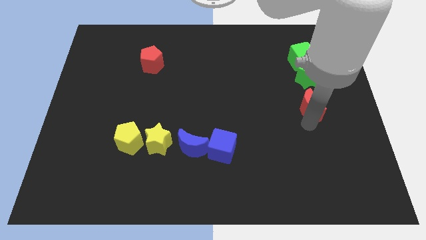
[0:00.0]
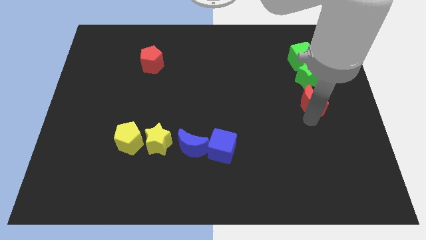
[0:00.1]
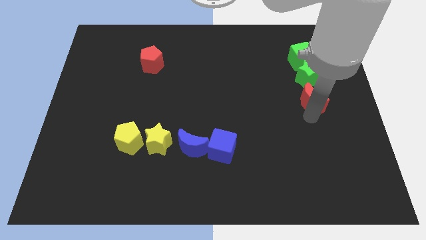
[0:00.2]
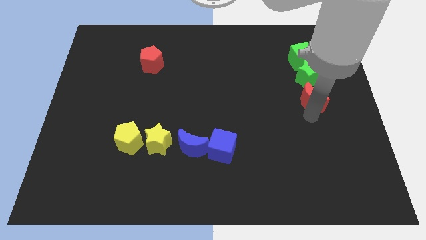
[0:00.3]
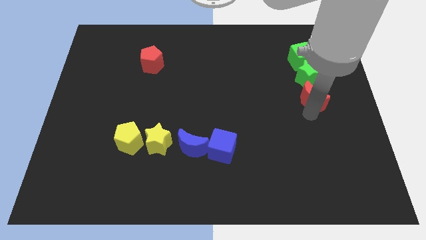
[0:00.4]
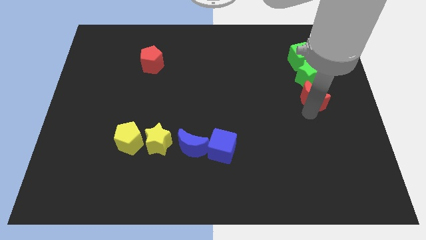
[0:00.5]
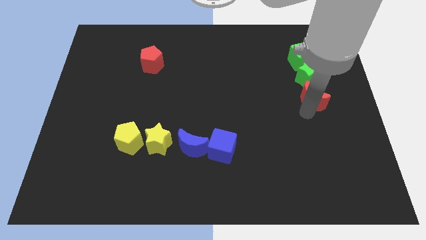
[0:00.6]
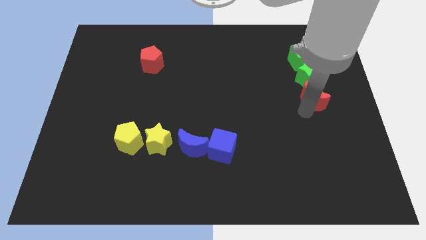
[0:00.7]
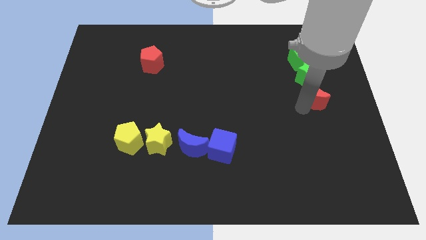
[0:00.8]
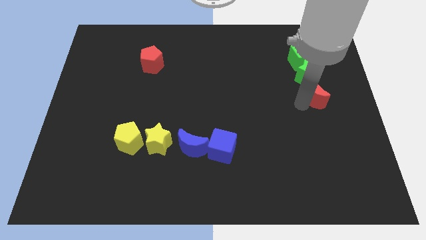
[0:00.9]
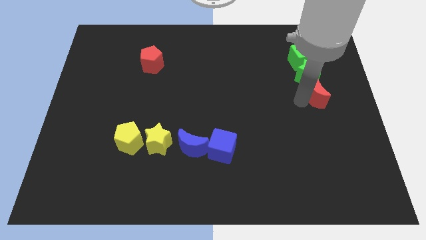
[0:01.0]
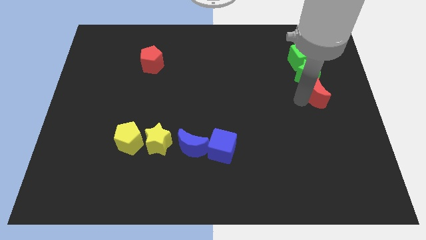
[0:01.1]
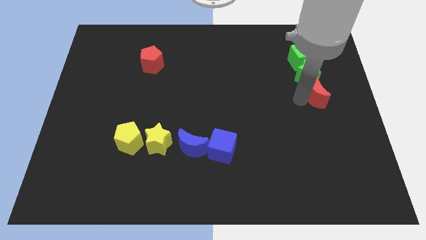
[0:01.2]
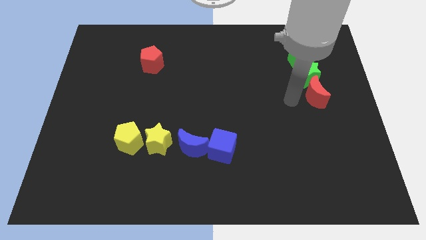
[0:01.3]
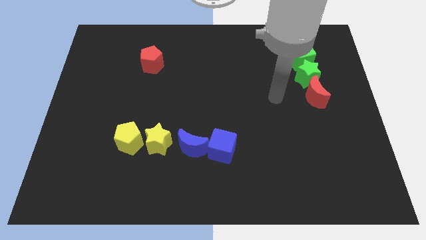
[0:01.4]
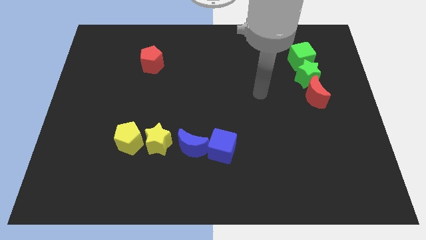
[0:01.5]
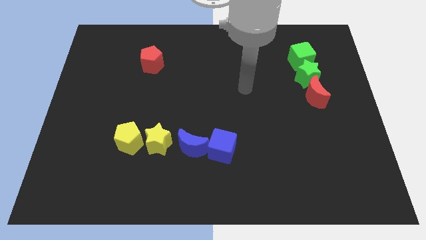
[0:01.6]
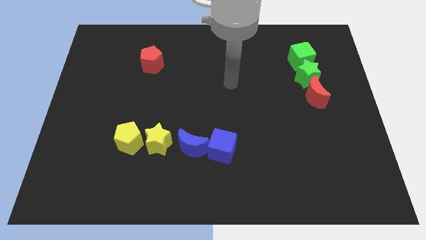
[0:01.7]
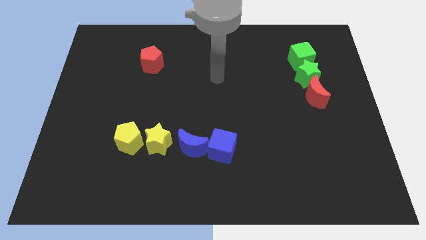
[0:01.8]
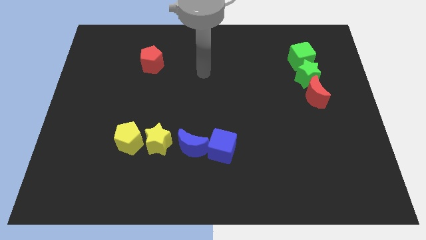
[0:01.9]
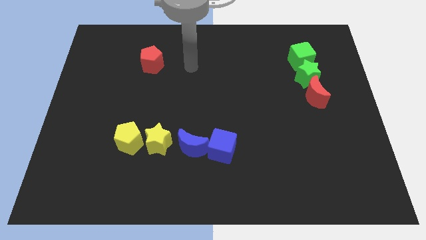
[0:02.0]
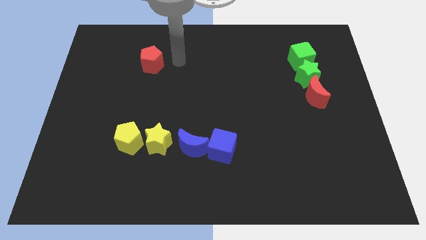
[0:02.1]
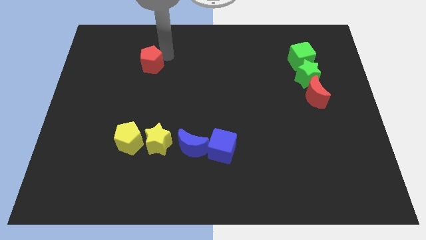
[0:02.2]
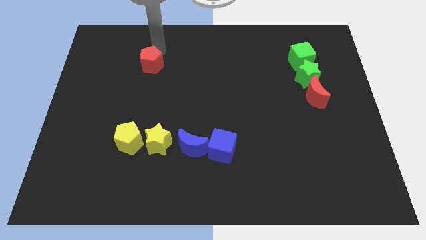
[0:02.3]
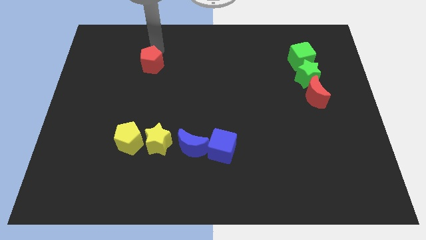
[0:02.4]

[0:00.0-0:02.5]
push red moon towards green star

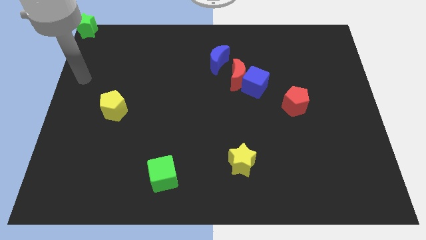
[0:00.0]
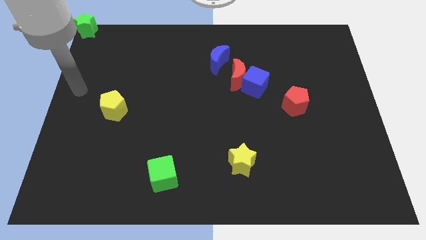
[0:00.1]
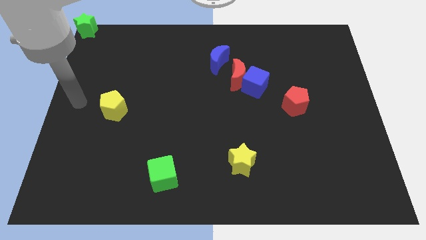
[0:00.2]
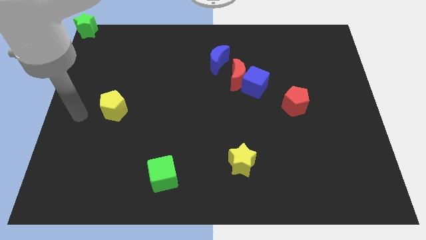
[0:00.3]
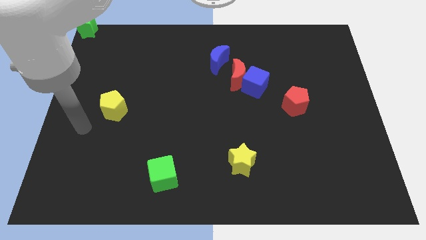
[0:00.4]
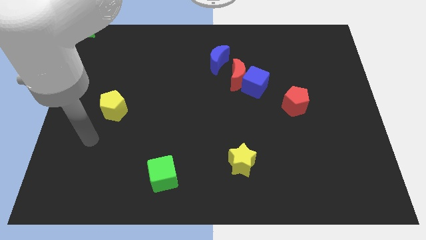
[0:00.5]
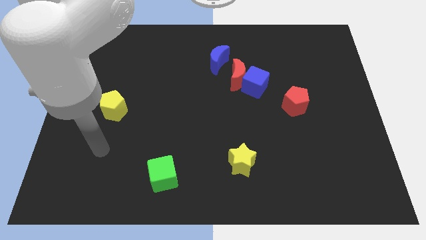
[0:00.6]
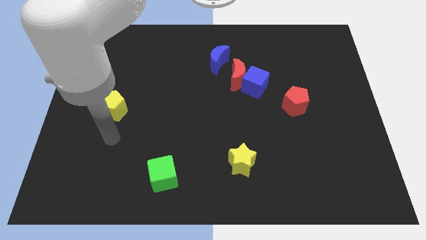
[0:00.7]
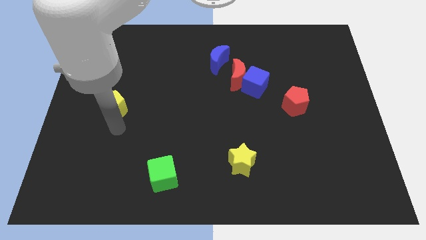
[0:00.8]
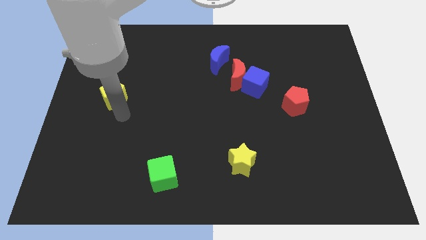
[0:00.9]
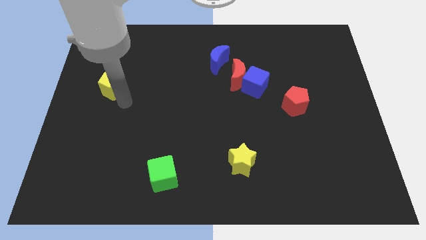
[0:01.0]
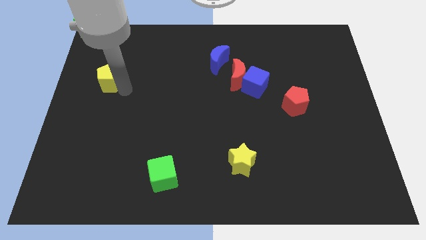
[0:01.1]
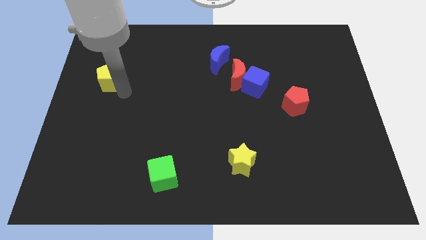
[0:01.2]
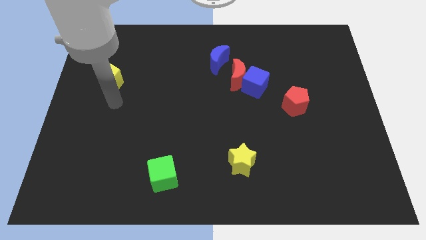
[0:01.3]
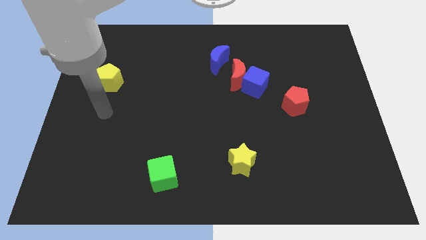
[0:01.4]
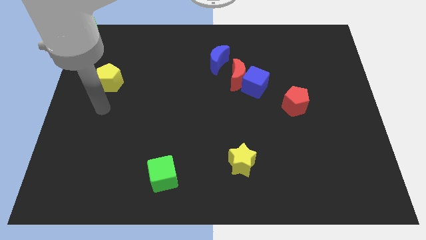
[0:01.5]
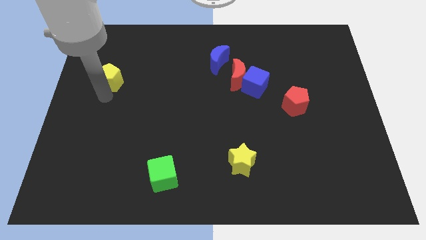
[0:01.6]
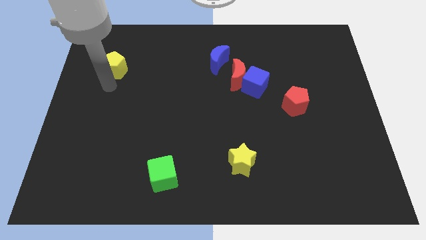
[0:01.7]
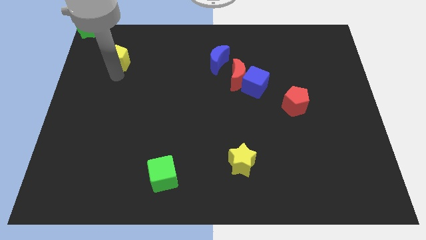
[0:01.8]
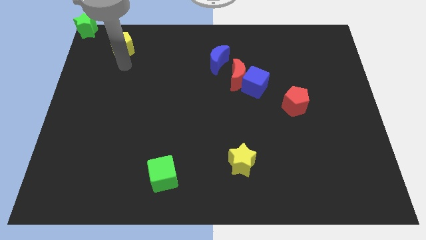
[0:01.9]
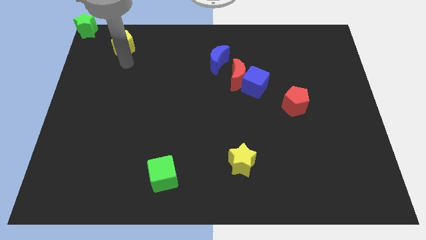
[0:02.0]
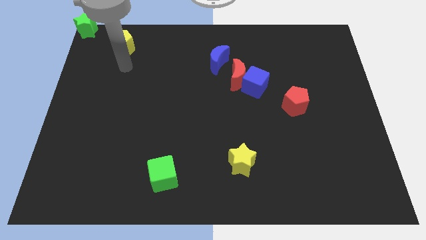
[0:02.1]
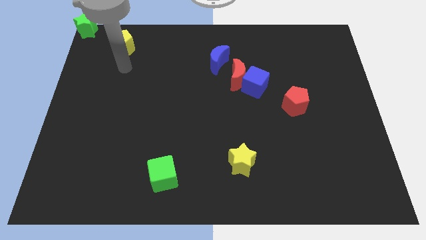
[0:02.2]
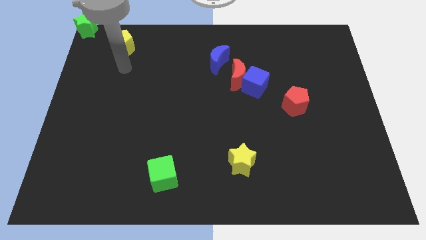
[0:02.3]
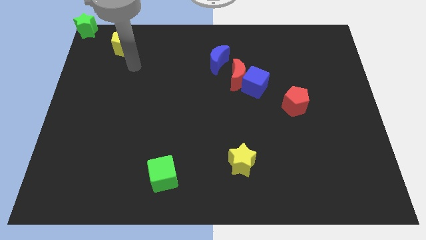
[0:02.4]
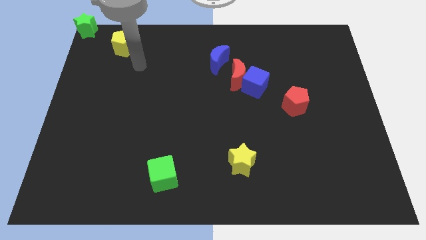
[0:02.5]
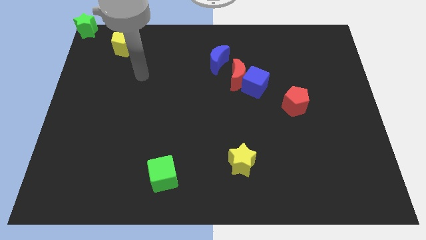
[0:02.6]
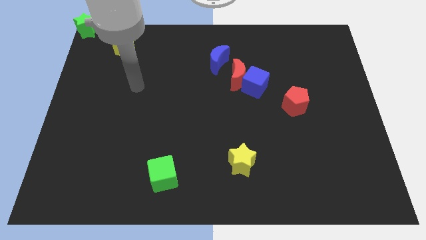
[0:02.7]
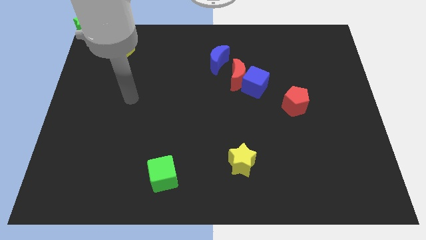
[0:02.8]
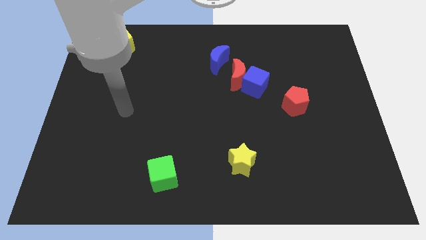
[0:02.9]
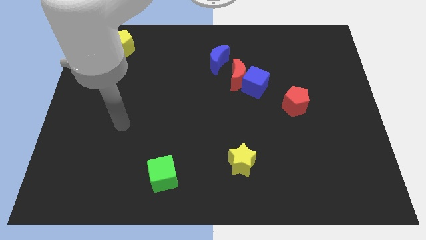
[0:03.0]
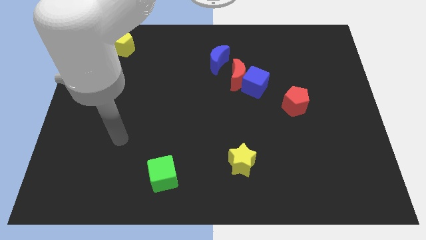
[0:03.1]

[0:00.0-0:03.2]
push the yellow pentagon towards the top

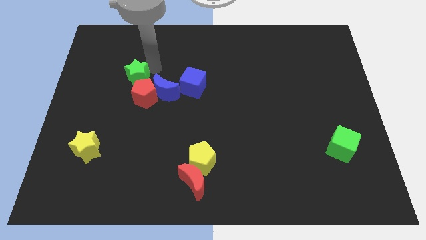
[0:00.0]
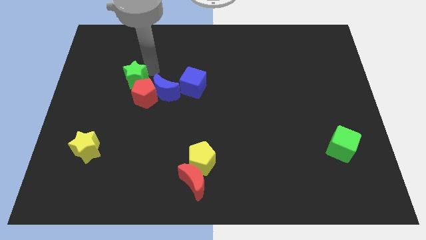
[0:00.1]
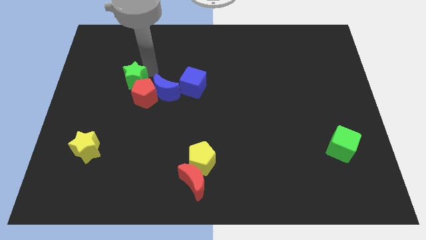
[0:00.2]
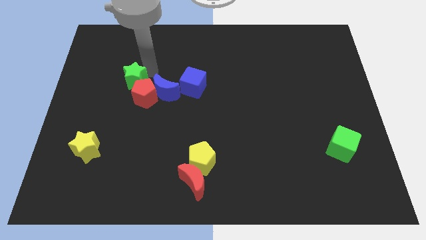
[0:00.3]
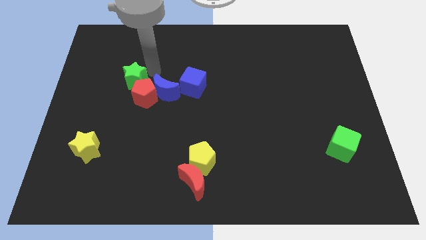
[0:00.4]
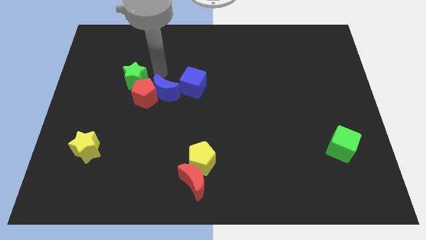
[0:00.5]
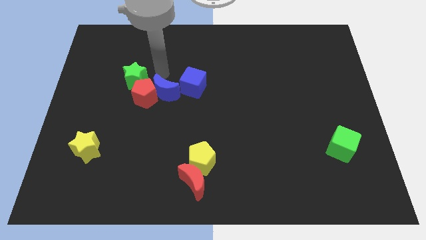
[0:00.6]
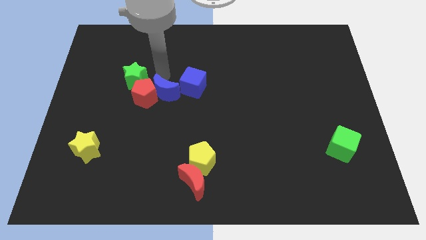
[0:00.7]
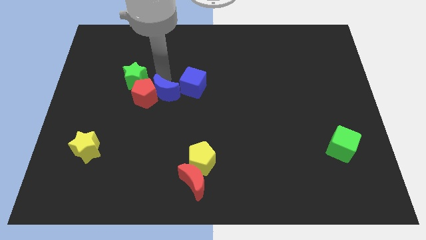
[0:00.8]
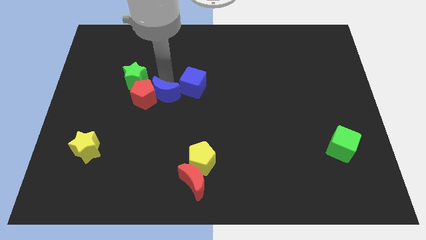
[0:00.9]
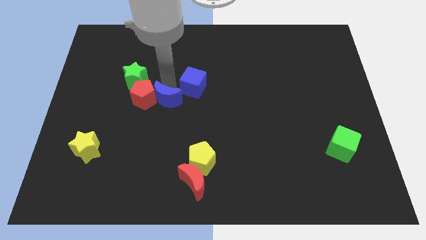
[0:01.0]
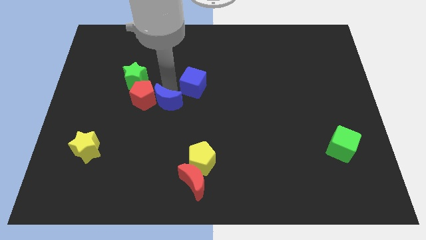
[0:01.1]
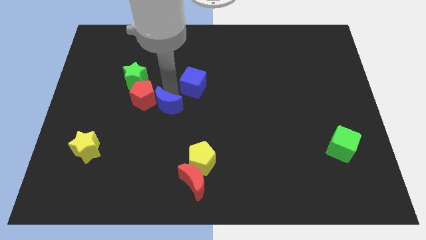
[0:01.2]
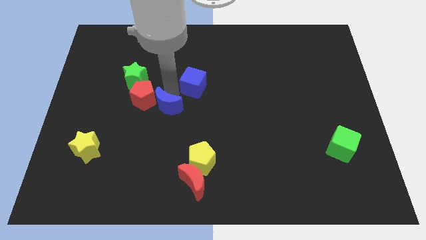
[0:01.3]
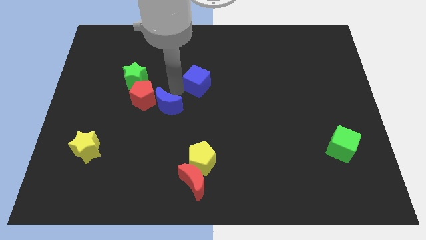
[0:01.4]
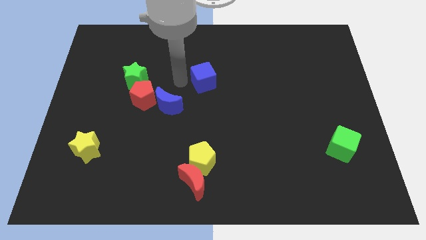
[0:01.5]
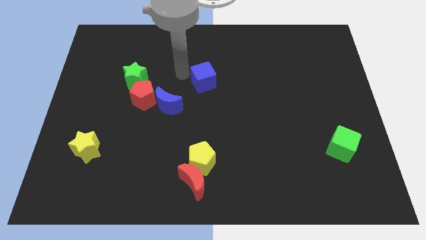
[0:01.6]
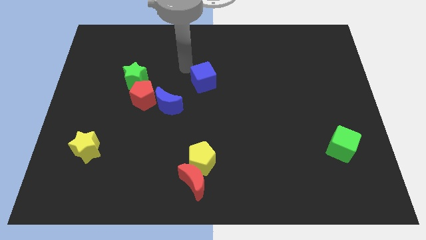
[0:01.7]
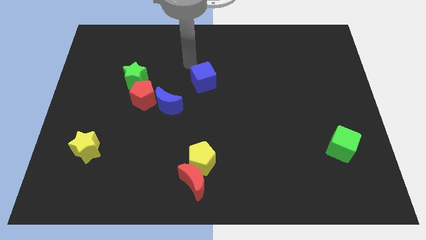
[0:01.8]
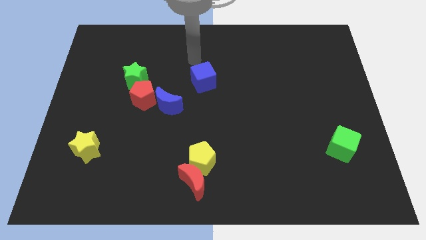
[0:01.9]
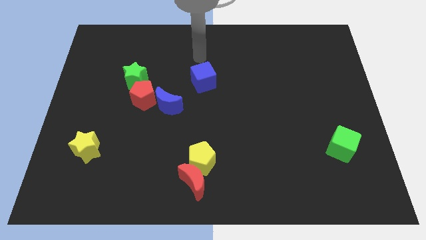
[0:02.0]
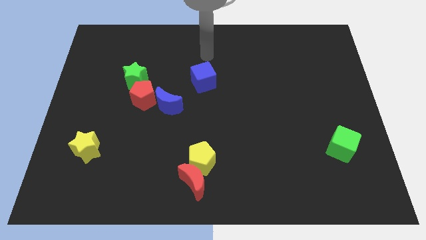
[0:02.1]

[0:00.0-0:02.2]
separate the blue blocks beside red pentagon

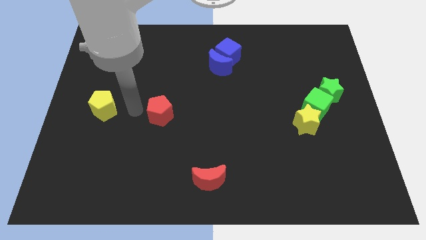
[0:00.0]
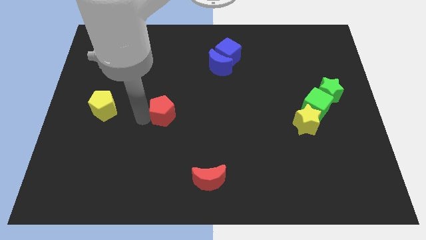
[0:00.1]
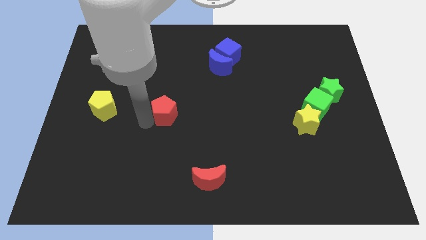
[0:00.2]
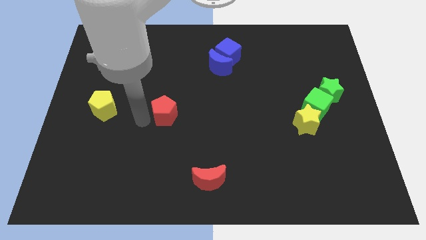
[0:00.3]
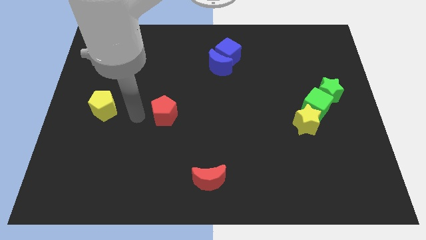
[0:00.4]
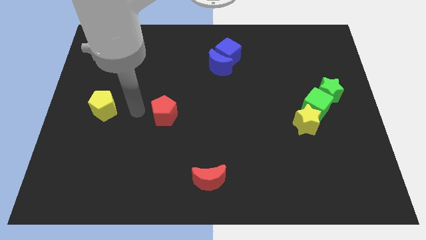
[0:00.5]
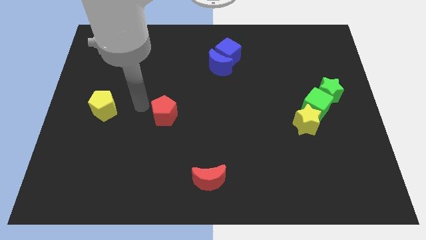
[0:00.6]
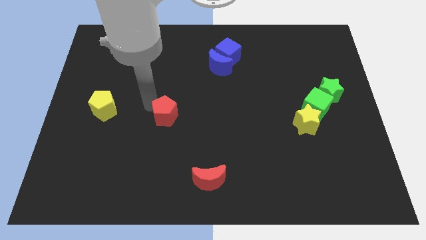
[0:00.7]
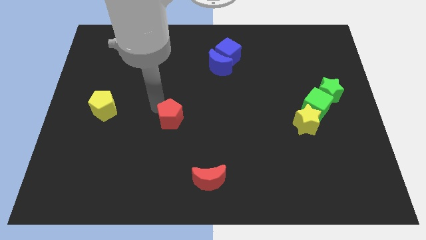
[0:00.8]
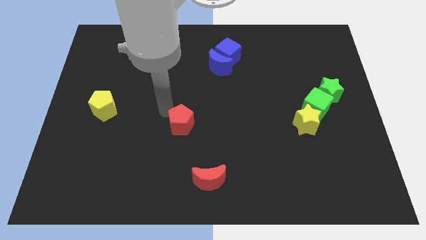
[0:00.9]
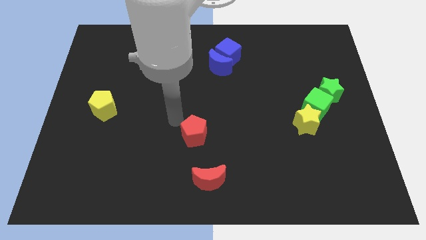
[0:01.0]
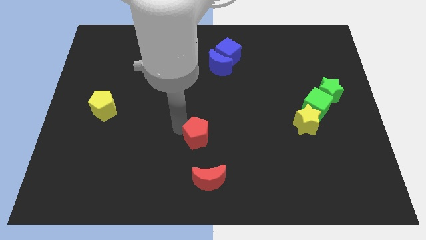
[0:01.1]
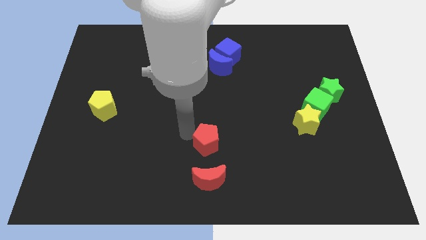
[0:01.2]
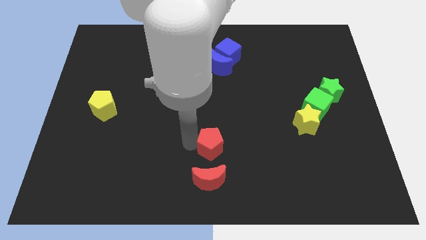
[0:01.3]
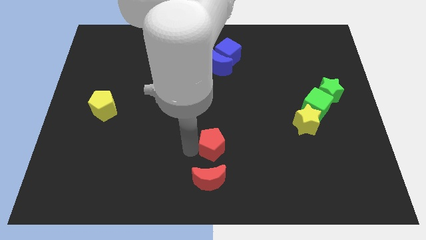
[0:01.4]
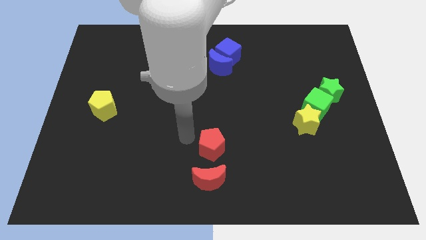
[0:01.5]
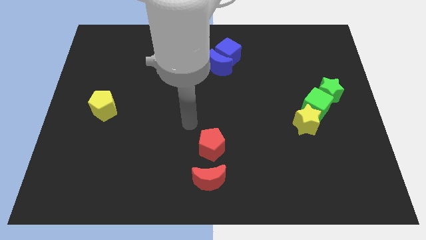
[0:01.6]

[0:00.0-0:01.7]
place red pentagon above red moon
